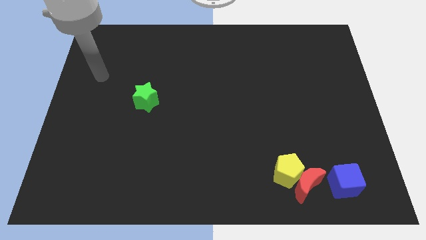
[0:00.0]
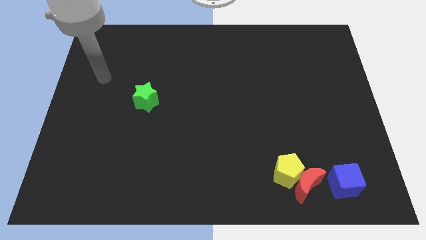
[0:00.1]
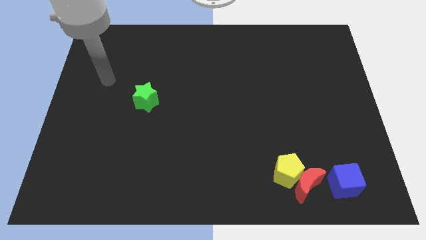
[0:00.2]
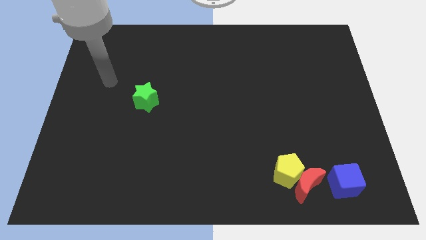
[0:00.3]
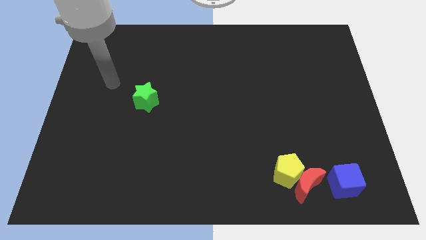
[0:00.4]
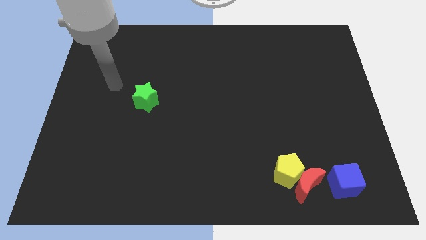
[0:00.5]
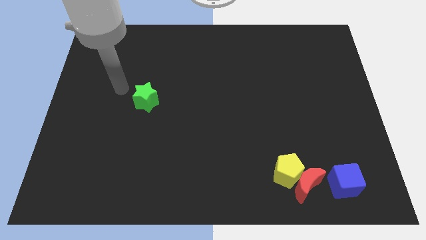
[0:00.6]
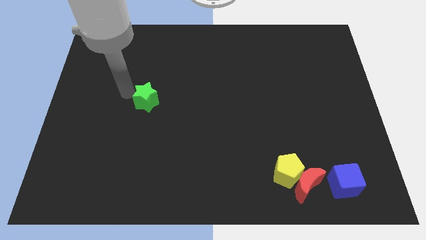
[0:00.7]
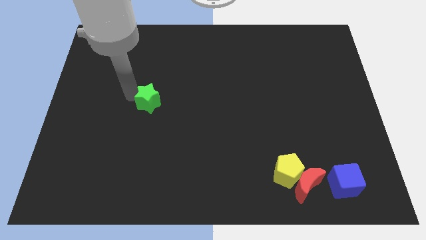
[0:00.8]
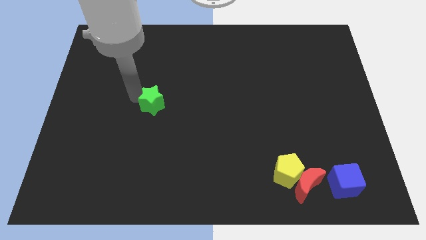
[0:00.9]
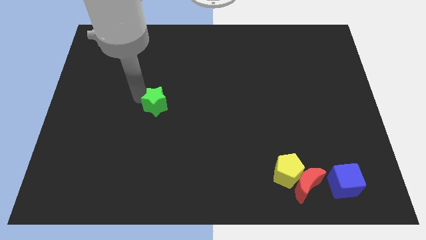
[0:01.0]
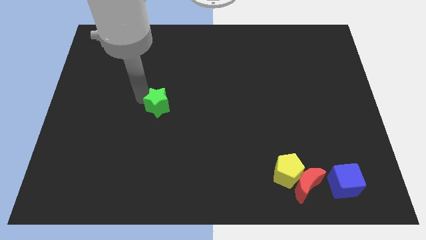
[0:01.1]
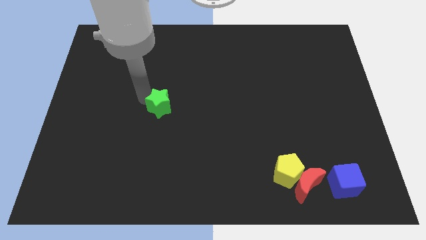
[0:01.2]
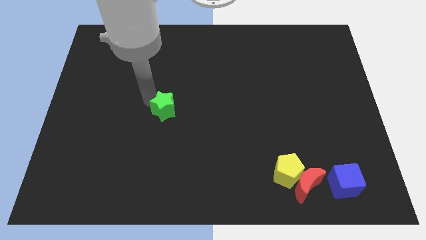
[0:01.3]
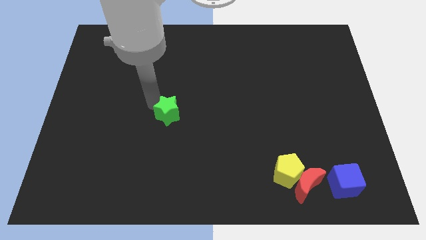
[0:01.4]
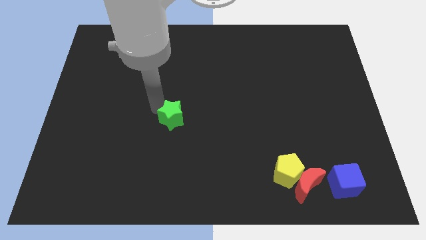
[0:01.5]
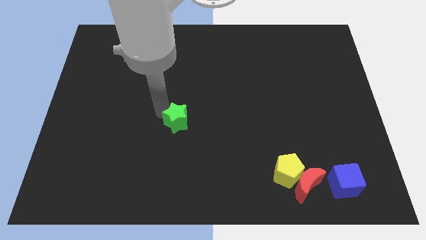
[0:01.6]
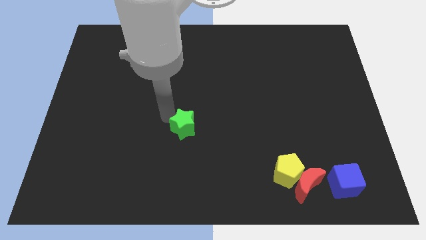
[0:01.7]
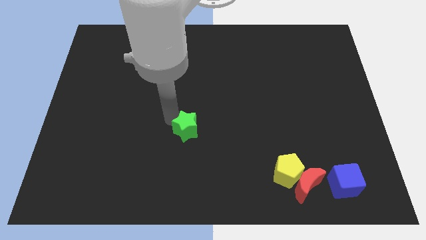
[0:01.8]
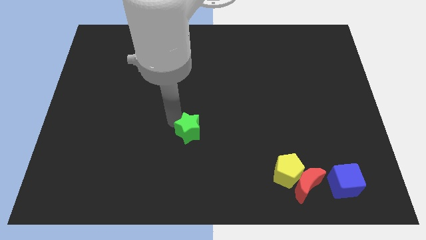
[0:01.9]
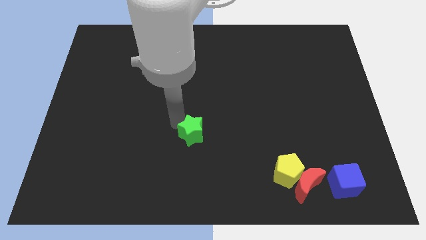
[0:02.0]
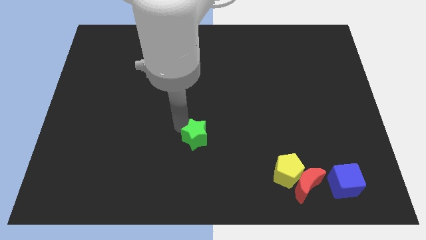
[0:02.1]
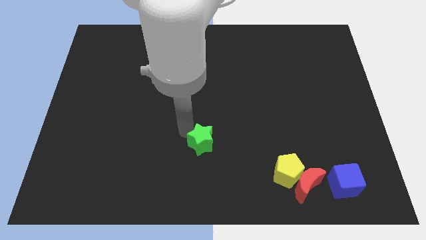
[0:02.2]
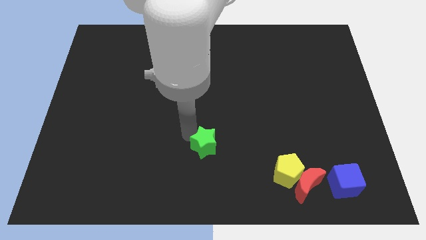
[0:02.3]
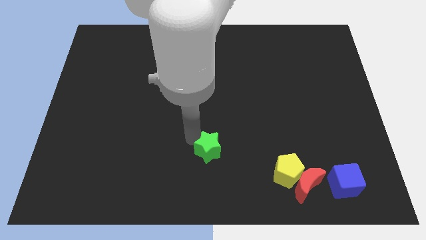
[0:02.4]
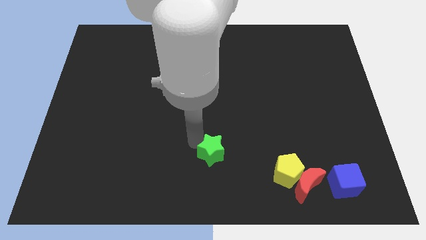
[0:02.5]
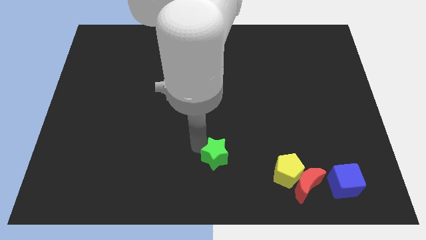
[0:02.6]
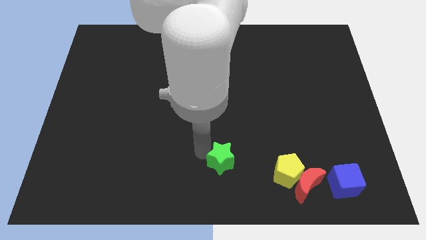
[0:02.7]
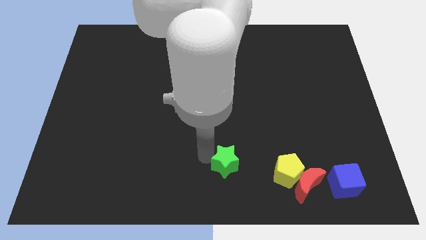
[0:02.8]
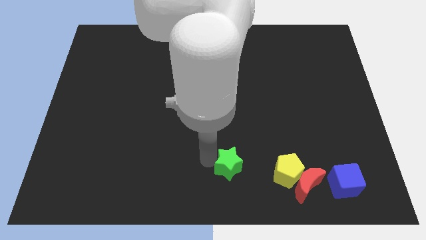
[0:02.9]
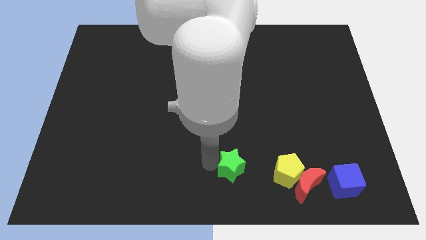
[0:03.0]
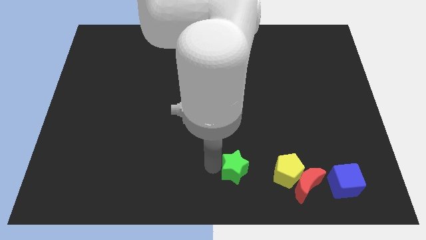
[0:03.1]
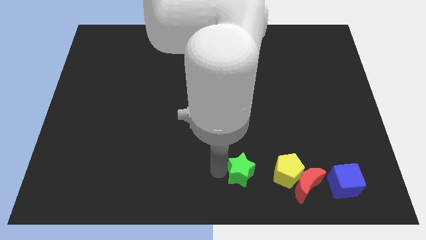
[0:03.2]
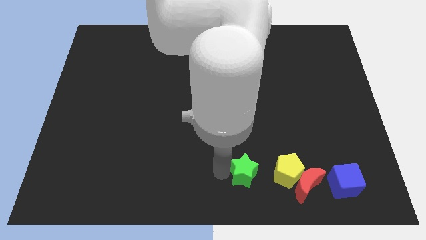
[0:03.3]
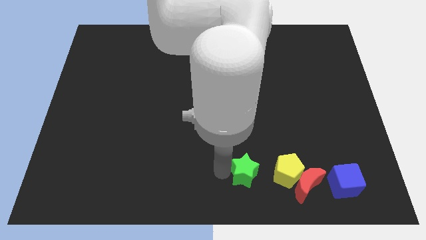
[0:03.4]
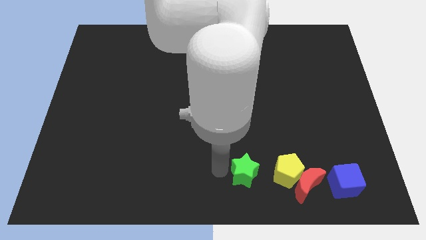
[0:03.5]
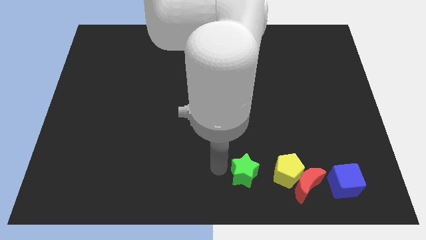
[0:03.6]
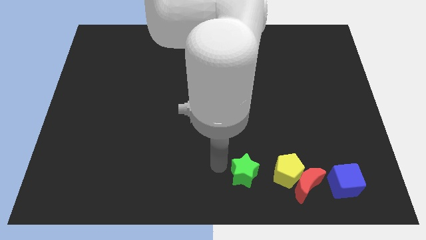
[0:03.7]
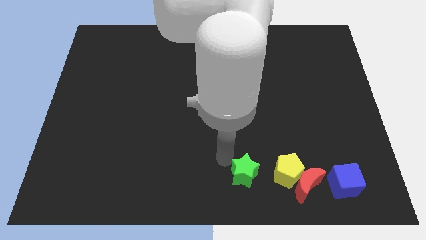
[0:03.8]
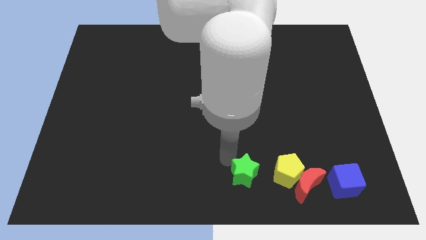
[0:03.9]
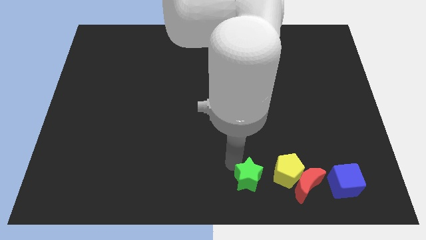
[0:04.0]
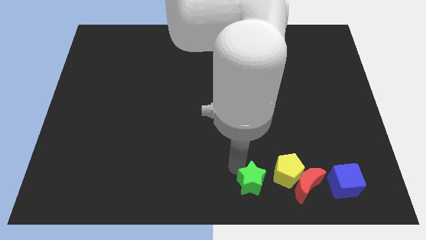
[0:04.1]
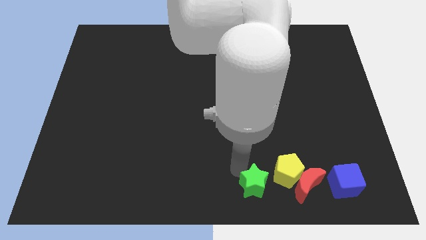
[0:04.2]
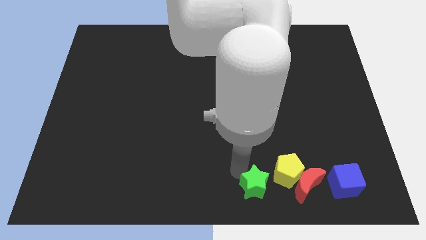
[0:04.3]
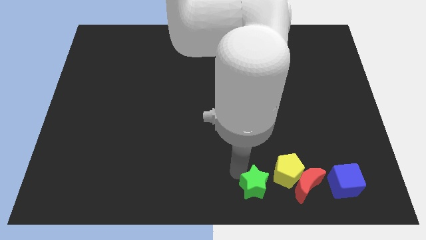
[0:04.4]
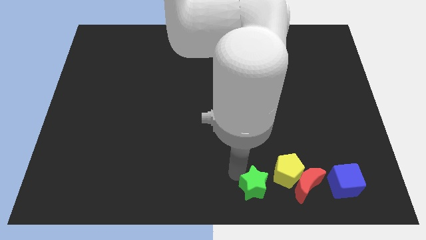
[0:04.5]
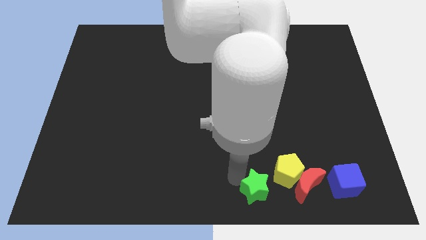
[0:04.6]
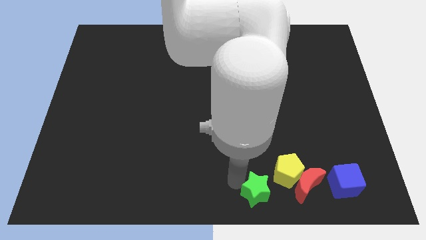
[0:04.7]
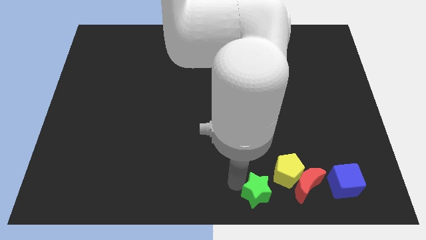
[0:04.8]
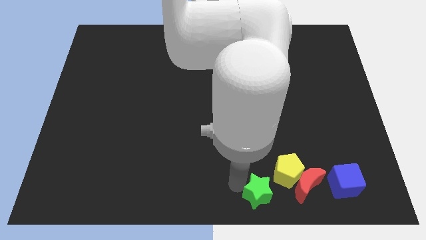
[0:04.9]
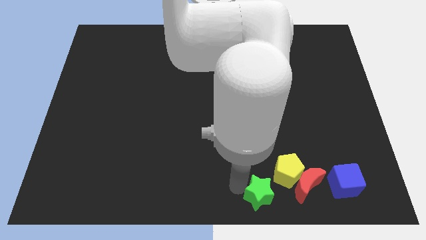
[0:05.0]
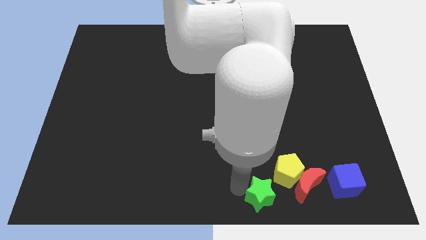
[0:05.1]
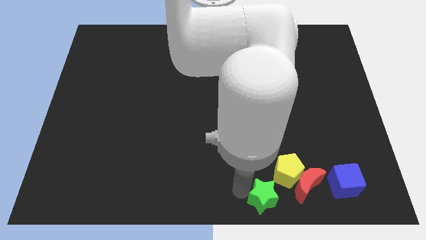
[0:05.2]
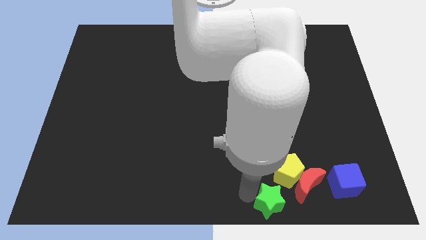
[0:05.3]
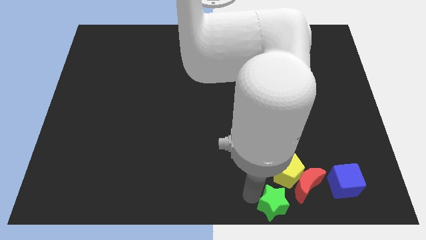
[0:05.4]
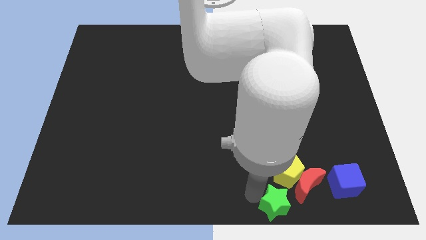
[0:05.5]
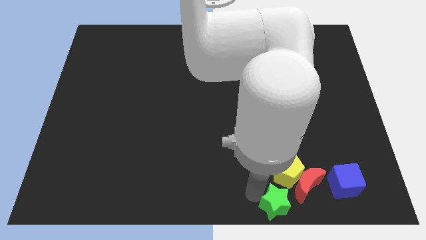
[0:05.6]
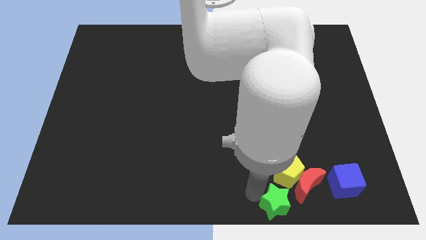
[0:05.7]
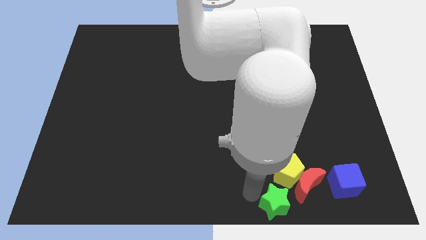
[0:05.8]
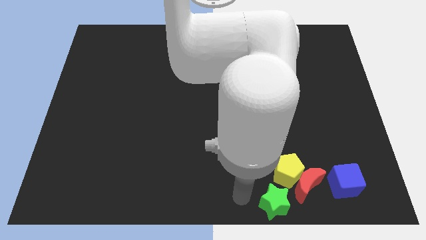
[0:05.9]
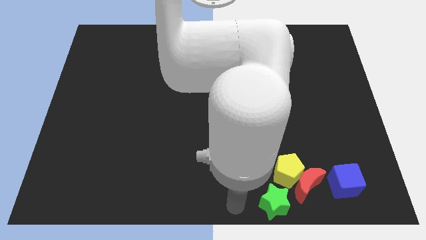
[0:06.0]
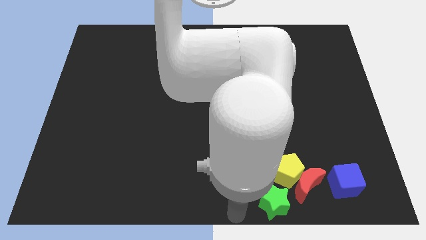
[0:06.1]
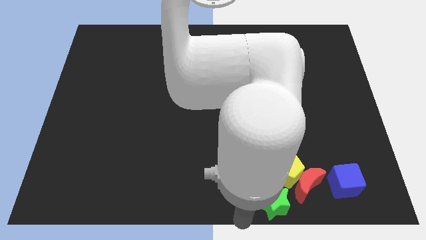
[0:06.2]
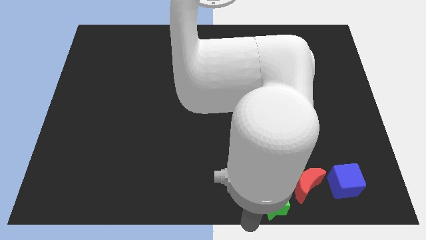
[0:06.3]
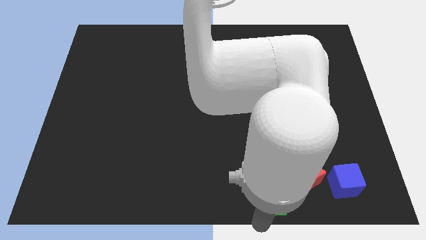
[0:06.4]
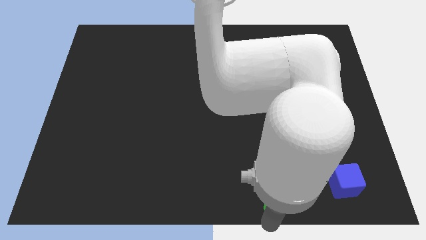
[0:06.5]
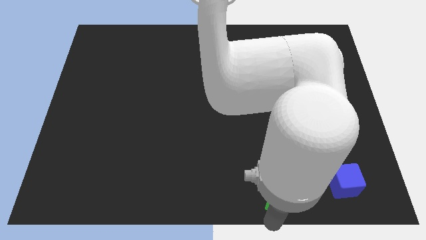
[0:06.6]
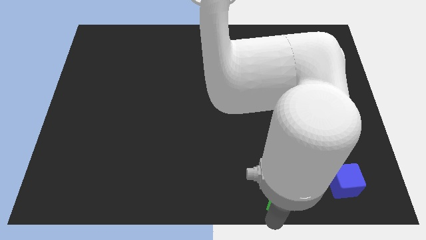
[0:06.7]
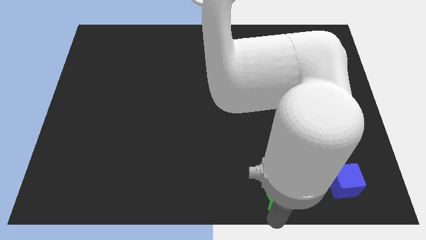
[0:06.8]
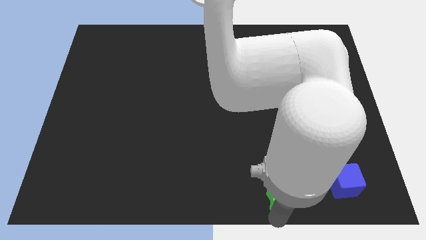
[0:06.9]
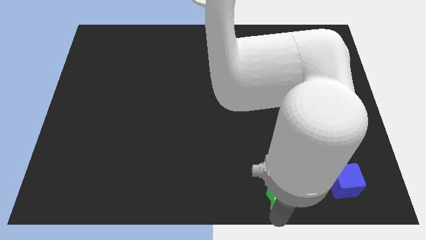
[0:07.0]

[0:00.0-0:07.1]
put the star close to the red block

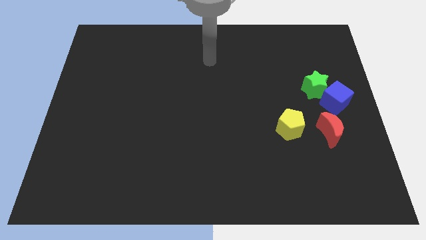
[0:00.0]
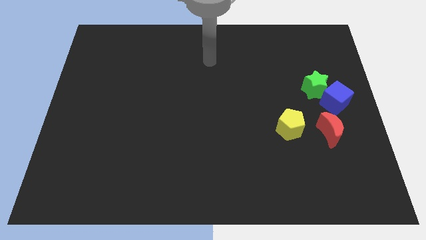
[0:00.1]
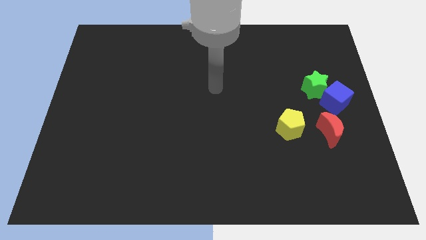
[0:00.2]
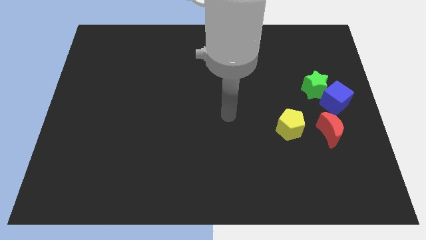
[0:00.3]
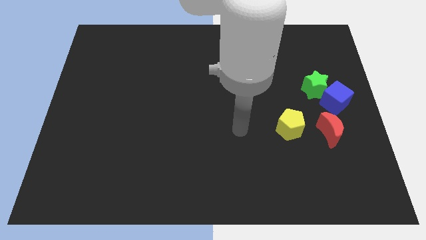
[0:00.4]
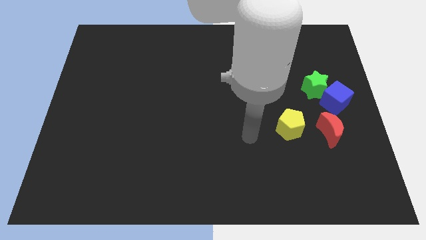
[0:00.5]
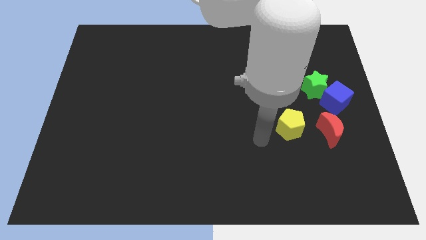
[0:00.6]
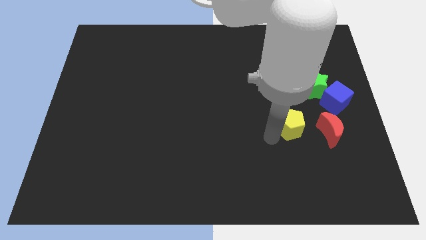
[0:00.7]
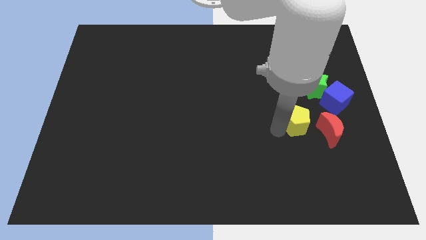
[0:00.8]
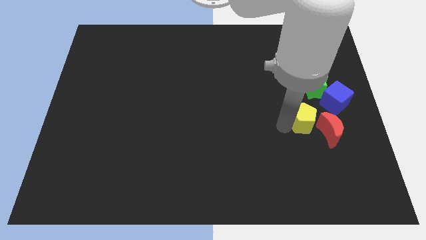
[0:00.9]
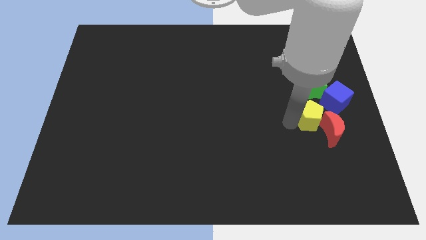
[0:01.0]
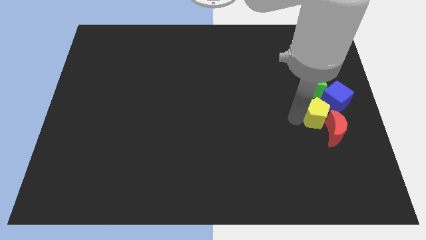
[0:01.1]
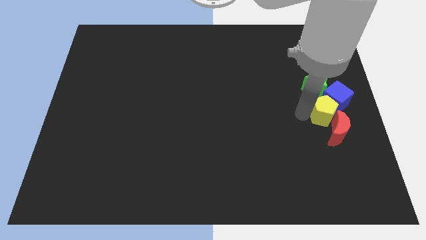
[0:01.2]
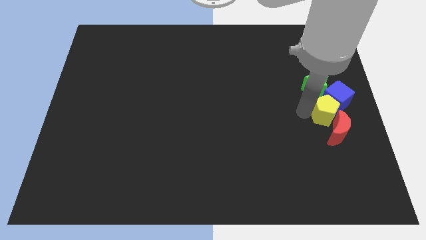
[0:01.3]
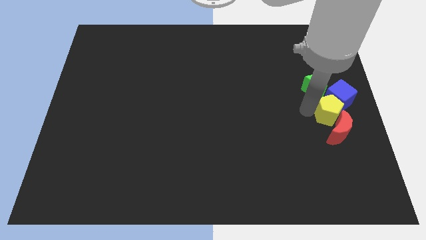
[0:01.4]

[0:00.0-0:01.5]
slide the pentagon next to the blue cube

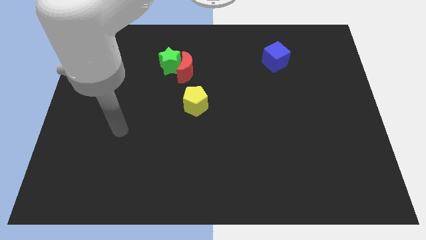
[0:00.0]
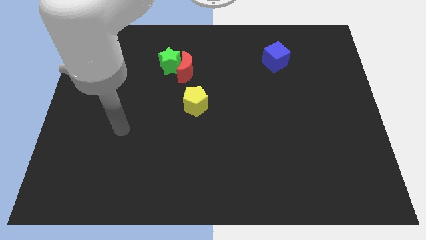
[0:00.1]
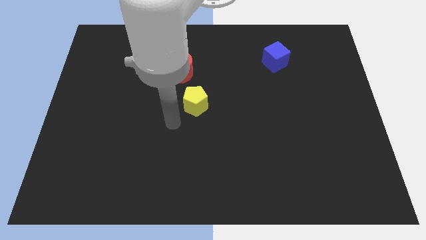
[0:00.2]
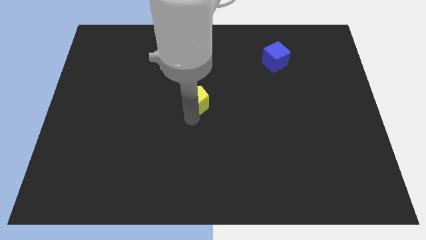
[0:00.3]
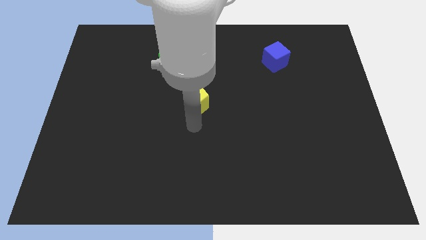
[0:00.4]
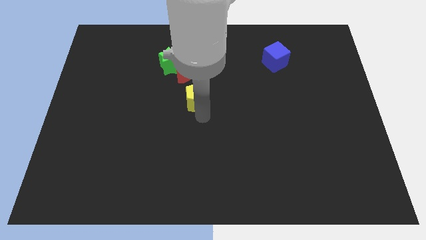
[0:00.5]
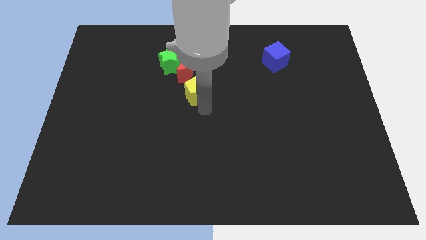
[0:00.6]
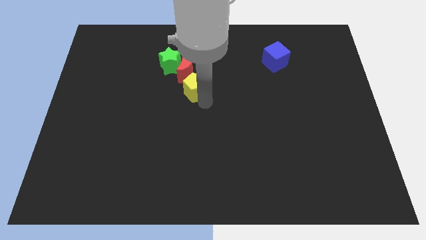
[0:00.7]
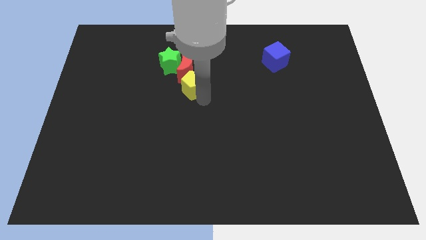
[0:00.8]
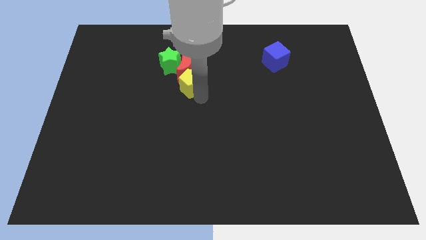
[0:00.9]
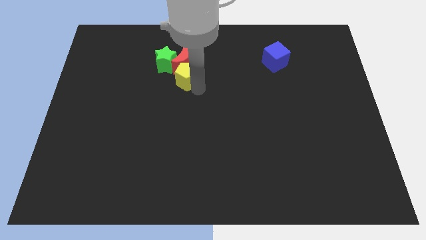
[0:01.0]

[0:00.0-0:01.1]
slide the pentagon towards the red block
